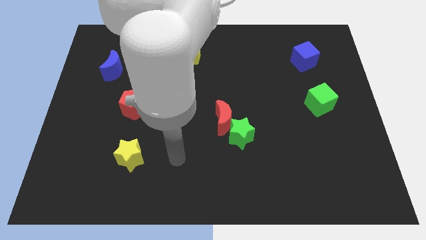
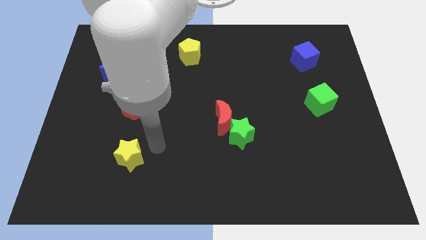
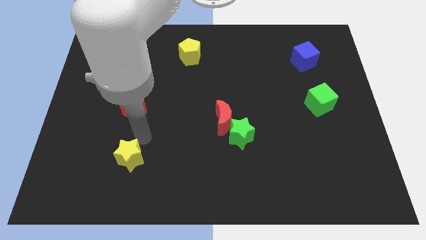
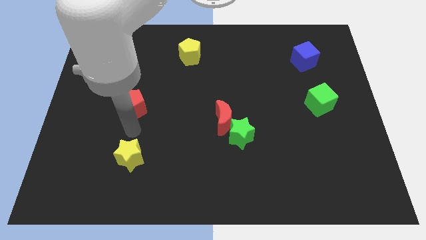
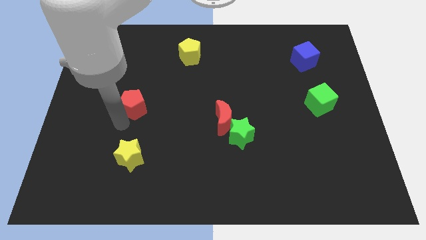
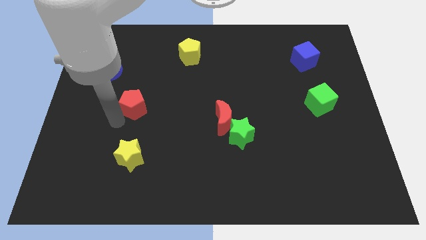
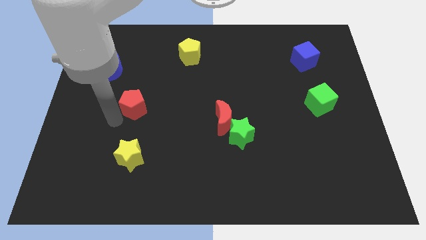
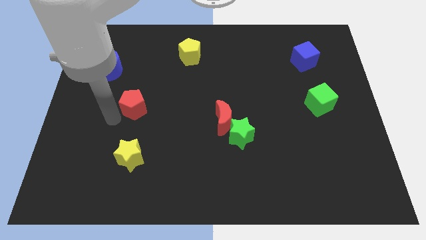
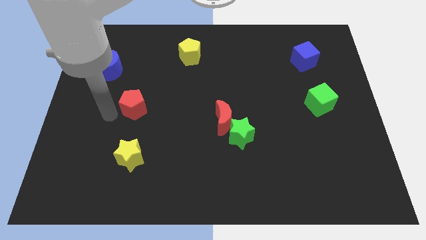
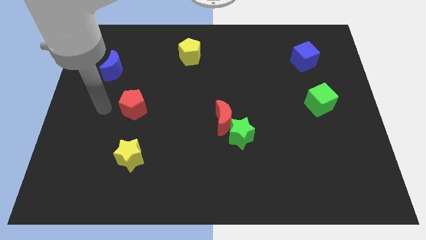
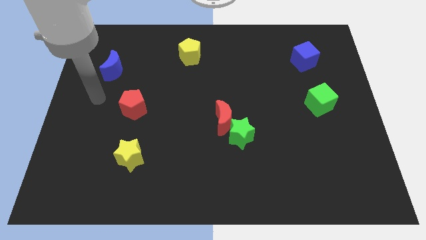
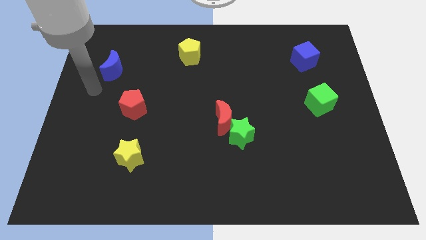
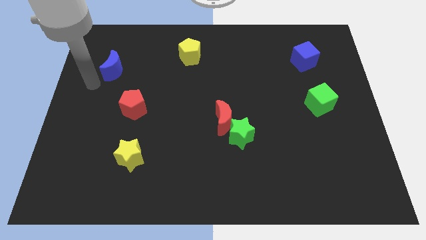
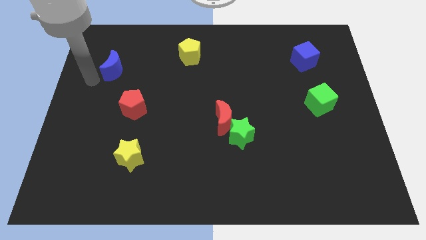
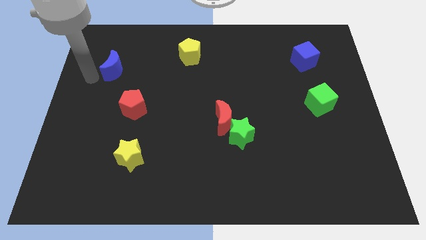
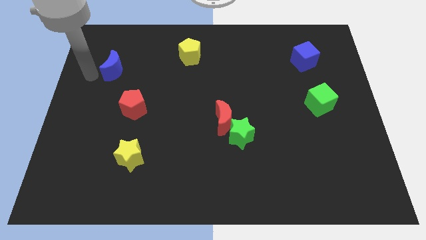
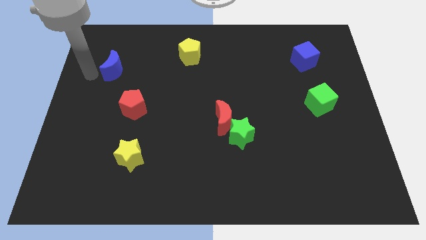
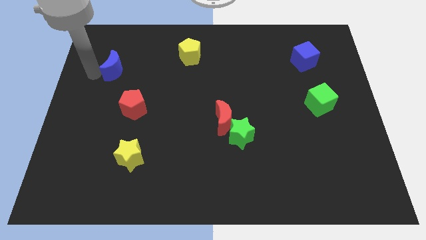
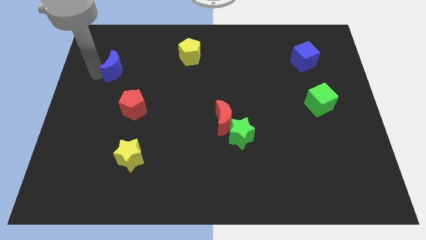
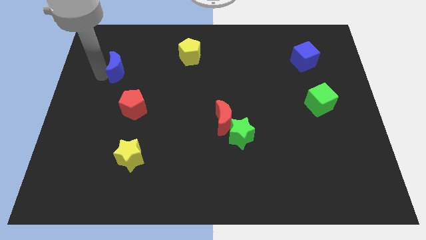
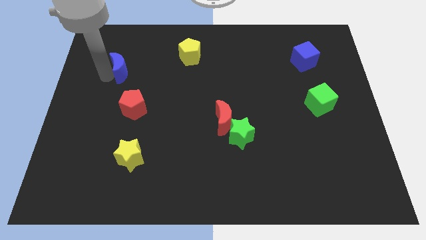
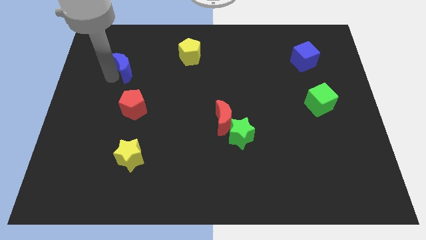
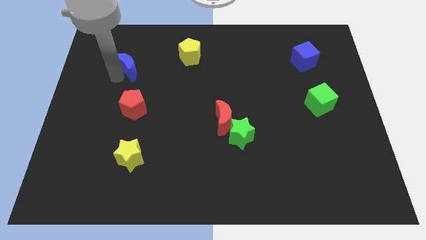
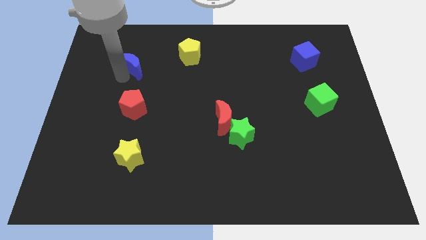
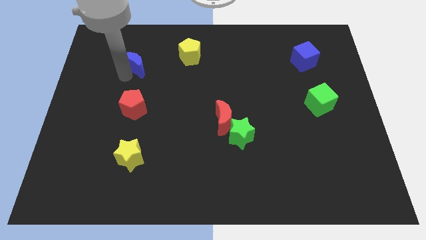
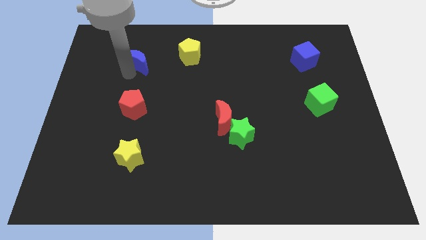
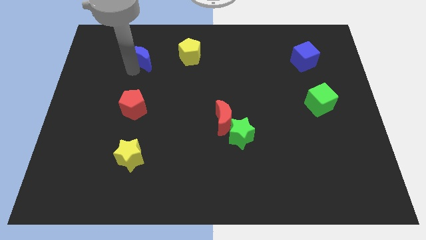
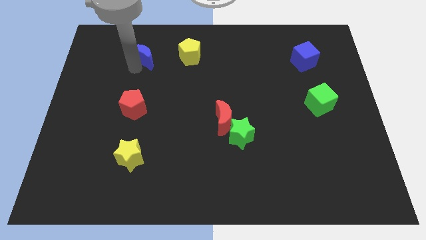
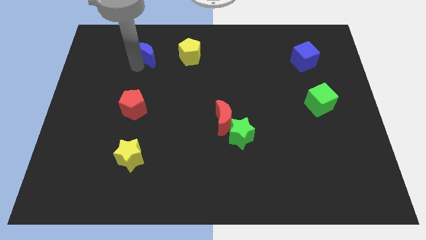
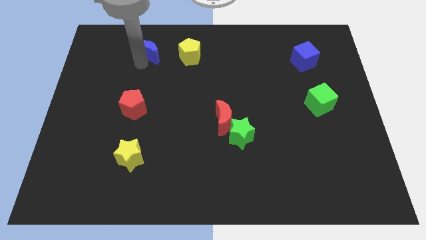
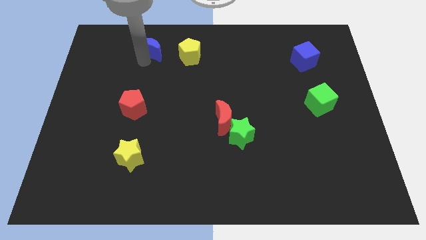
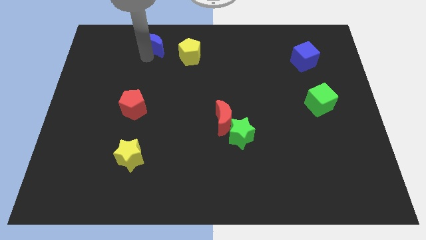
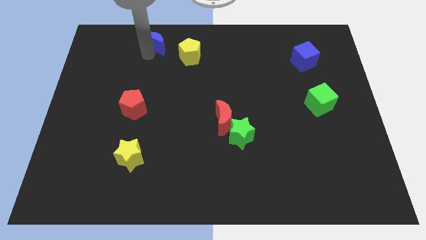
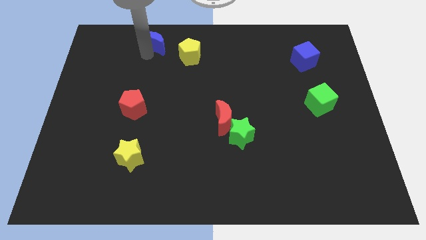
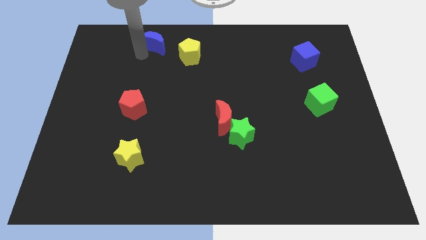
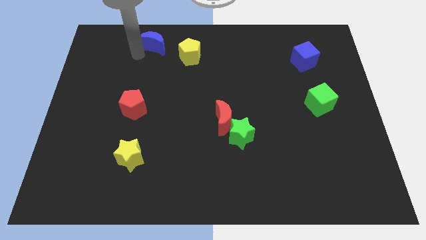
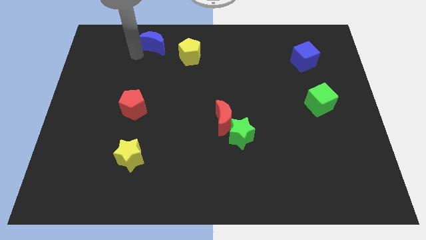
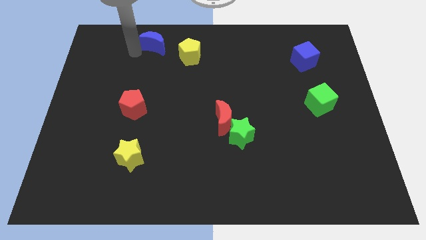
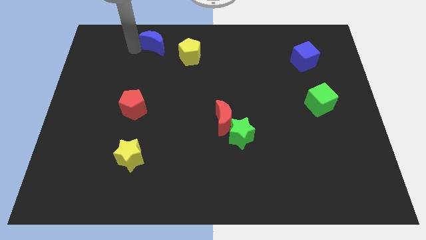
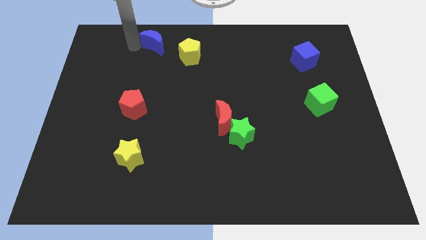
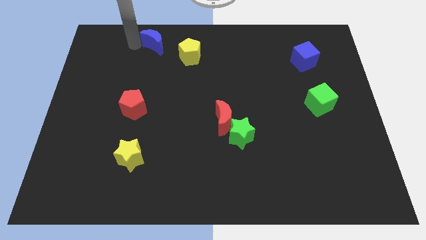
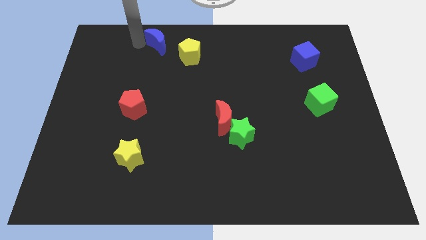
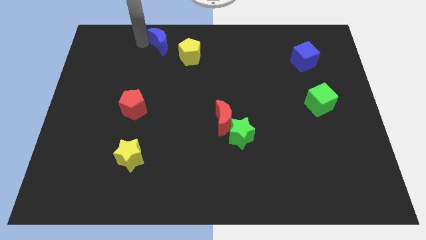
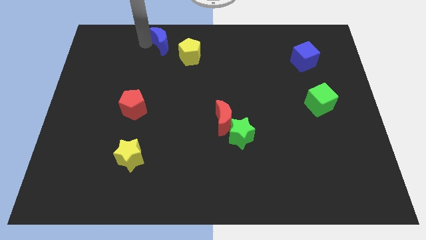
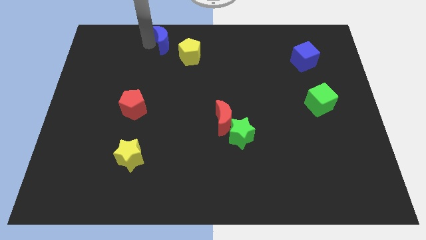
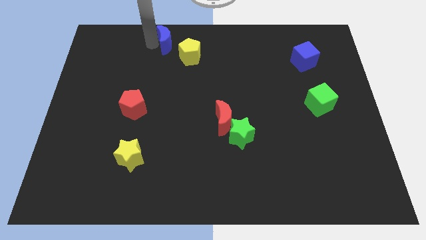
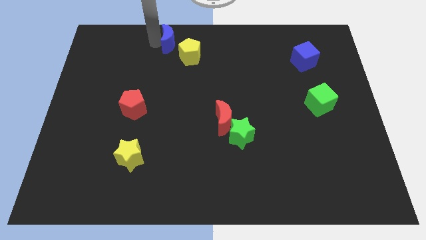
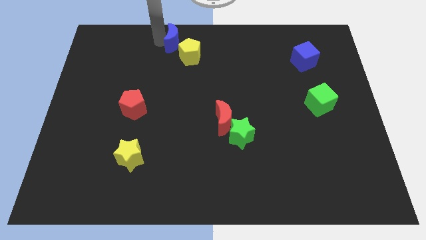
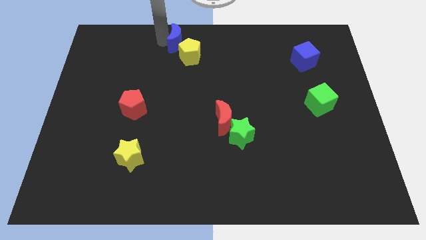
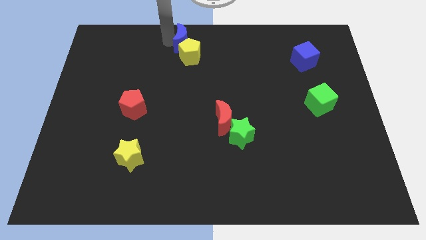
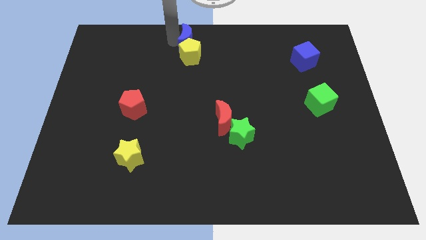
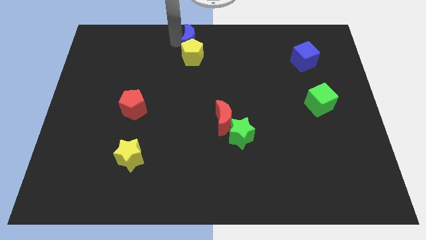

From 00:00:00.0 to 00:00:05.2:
slide the blue moon towards the yellow pentagon

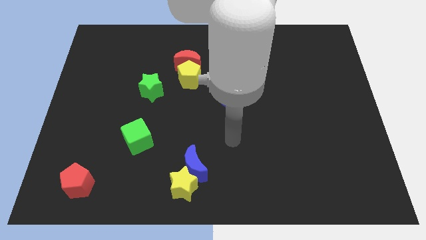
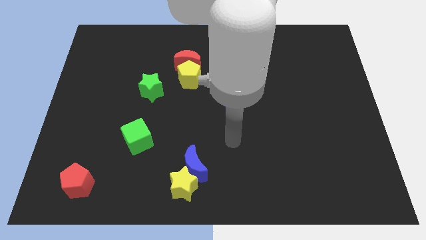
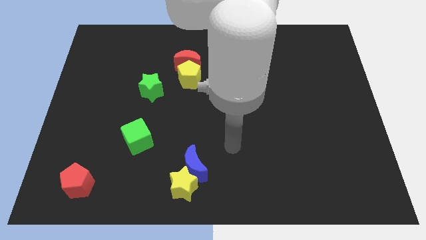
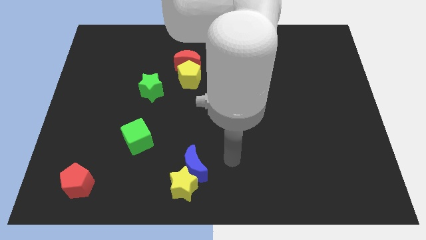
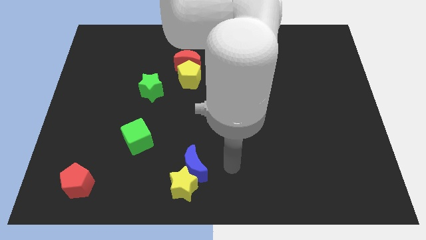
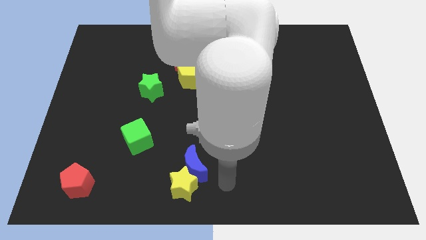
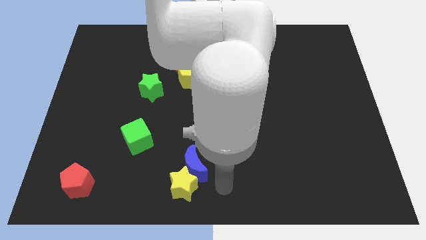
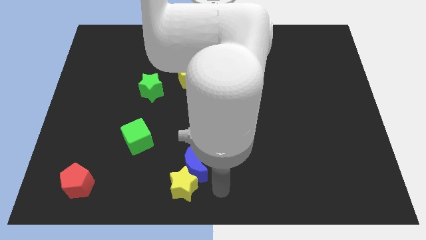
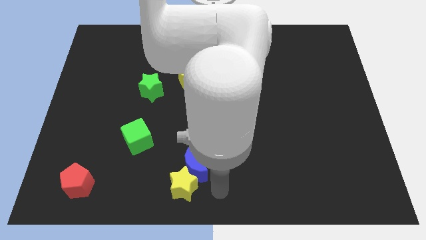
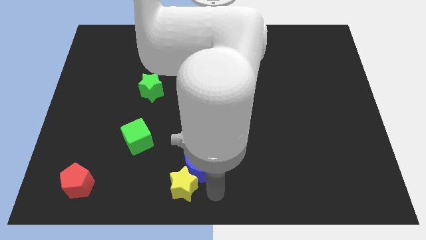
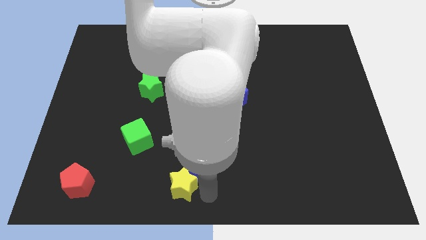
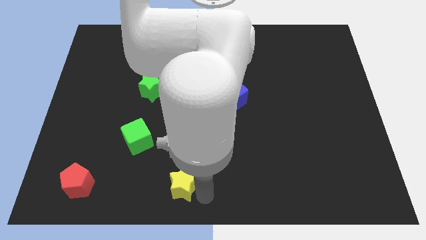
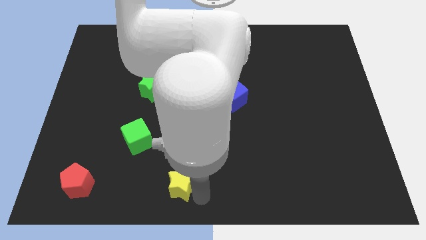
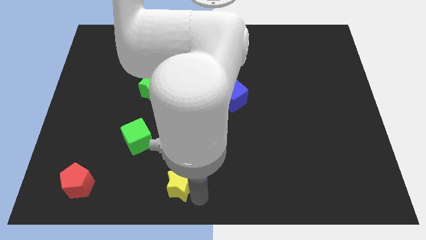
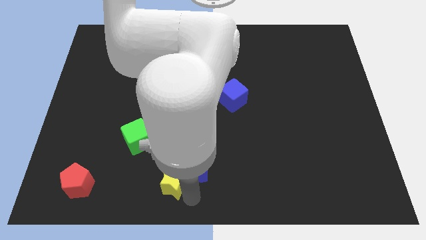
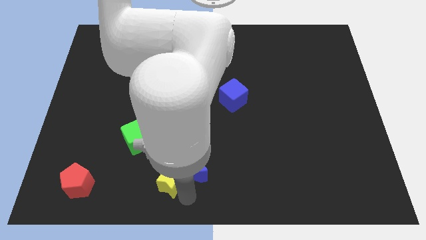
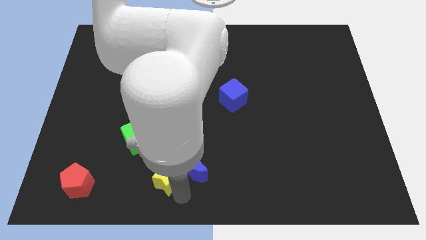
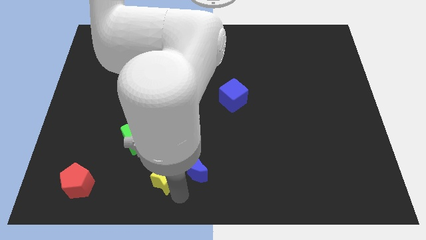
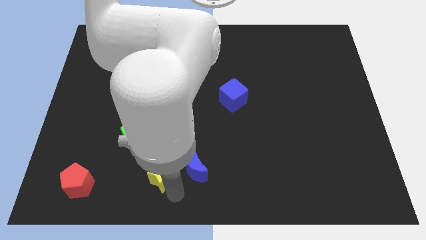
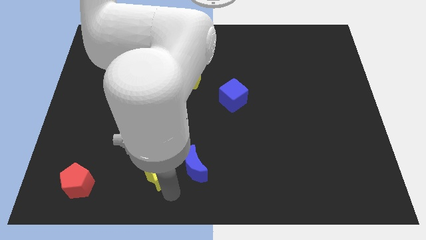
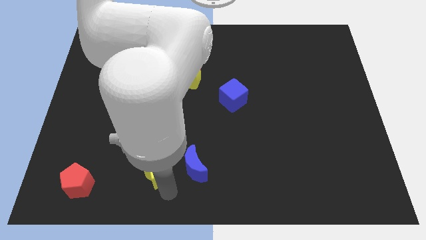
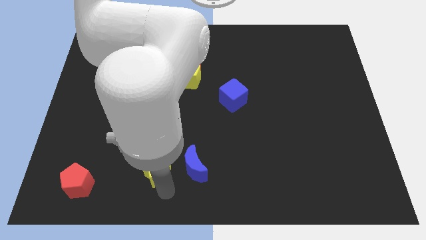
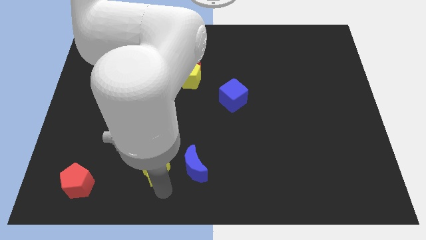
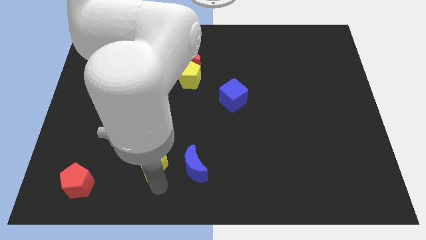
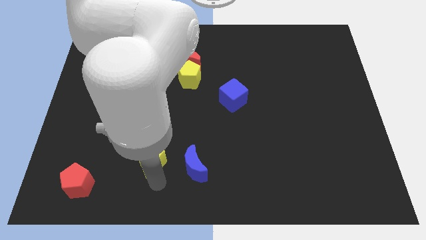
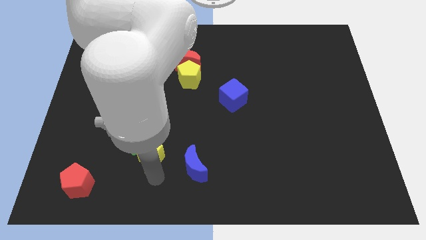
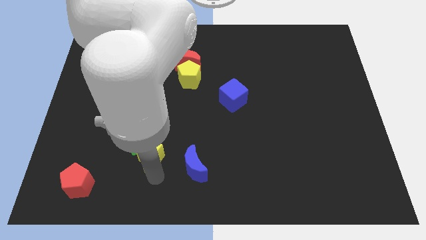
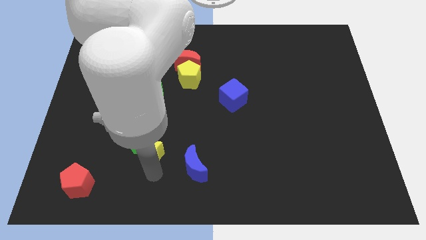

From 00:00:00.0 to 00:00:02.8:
move the yellow star towards the green cube

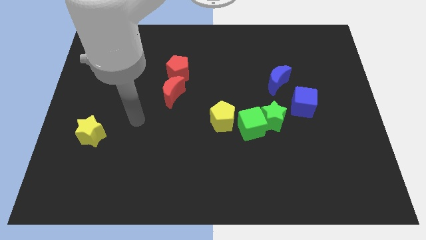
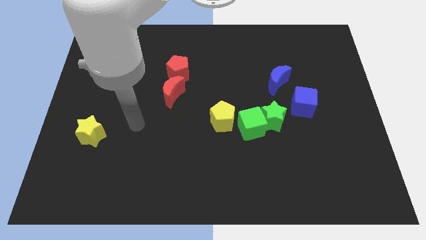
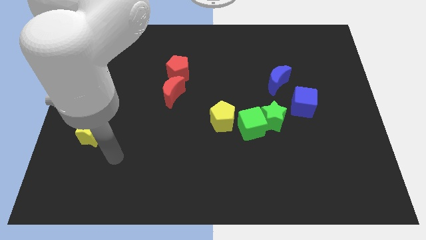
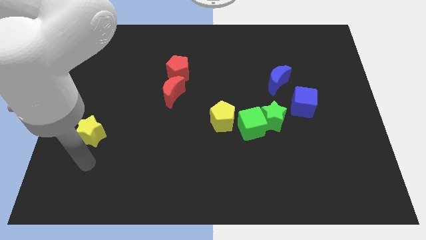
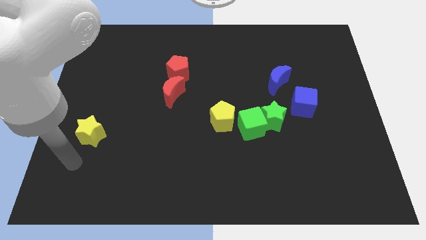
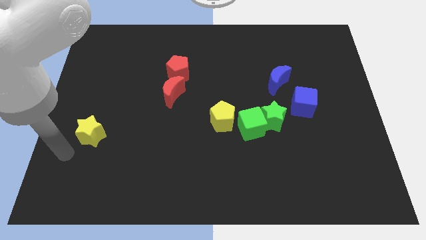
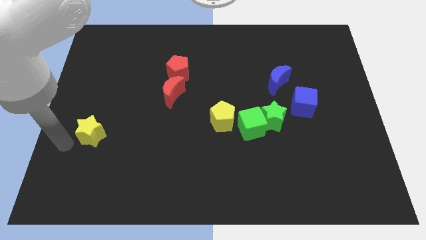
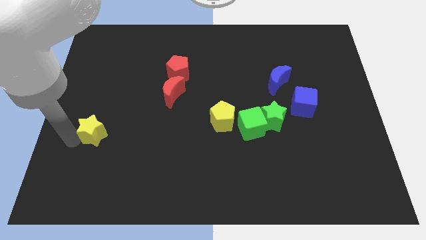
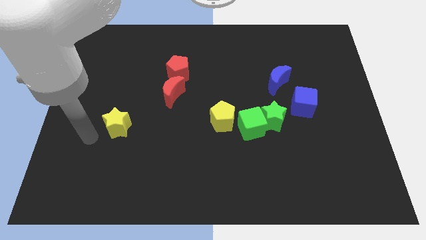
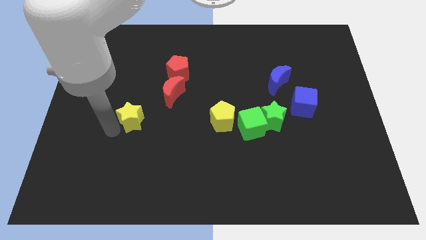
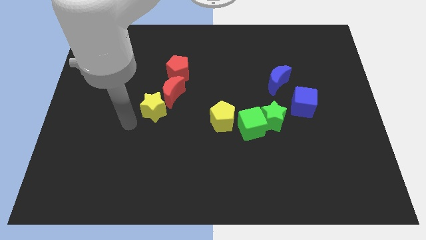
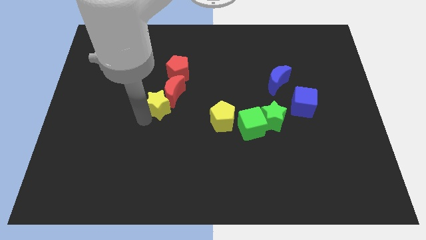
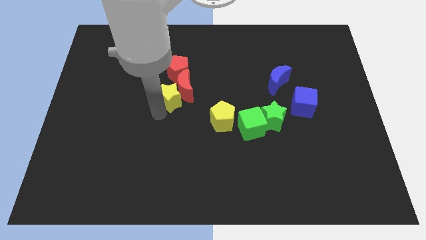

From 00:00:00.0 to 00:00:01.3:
move the yellow star next to the red moon
